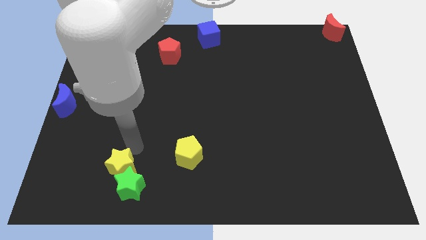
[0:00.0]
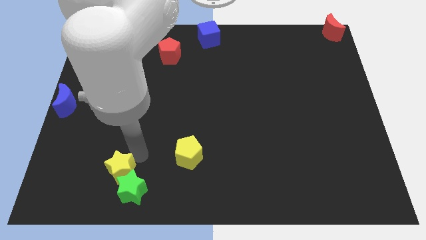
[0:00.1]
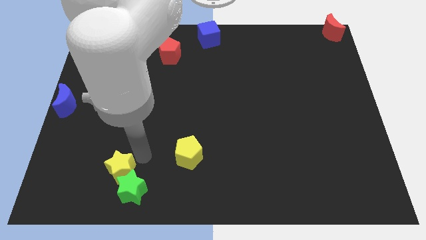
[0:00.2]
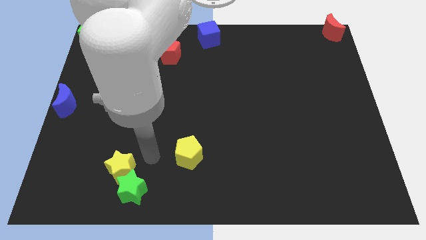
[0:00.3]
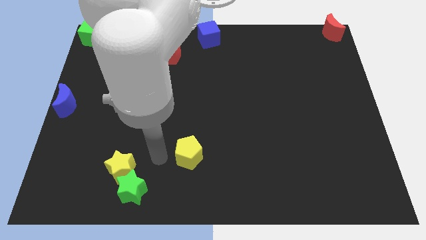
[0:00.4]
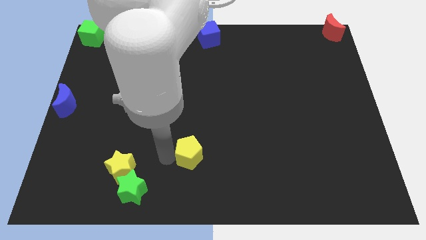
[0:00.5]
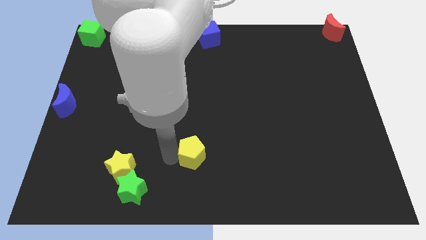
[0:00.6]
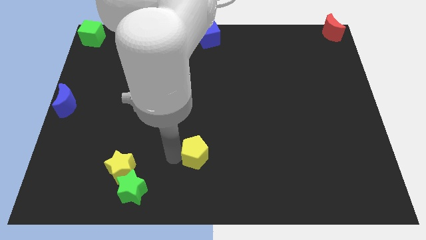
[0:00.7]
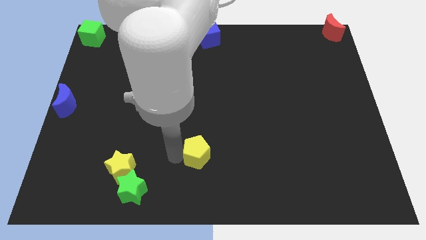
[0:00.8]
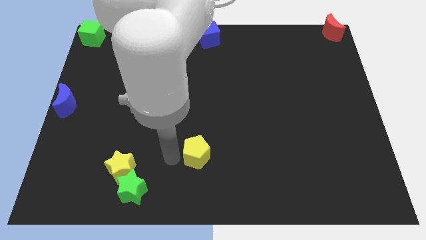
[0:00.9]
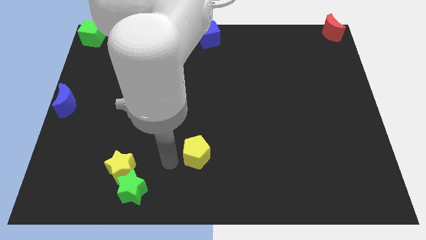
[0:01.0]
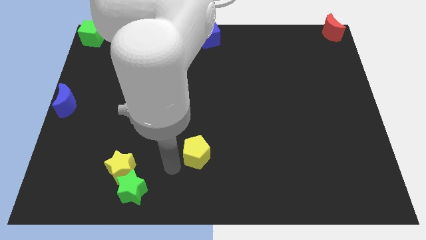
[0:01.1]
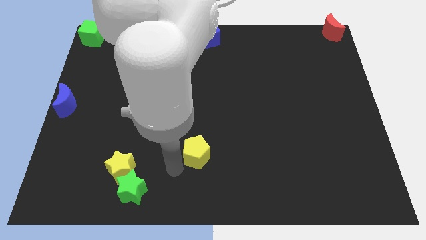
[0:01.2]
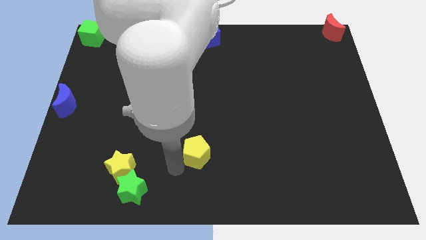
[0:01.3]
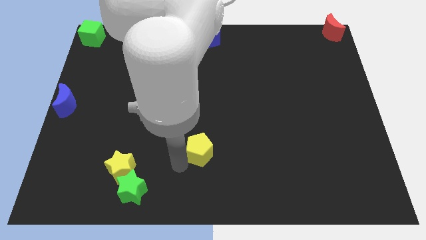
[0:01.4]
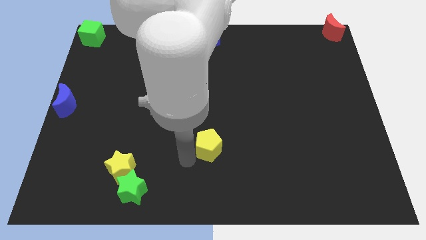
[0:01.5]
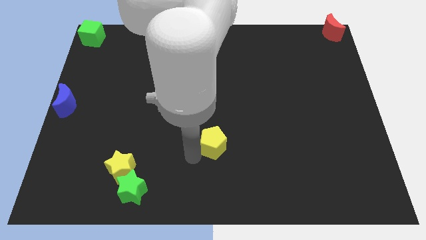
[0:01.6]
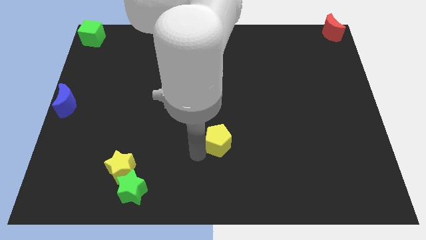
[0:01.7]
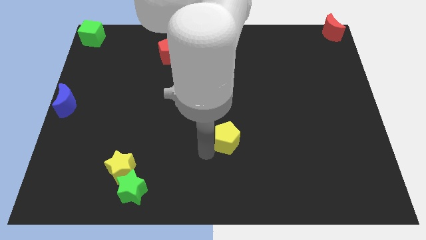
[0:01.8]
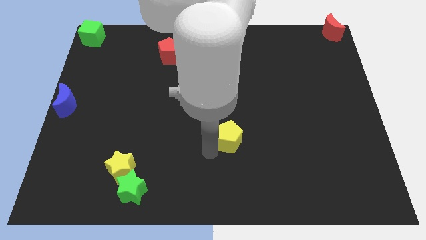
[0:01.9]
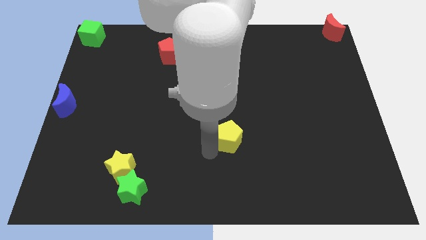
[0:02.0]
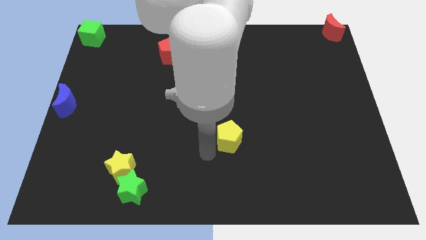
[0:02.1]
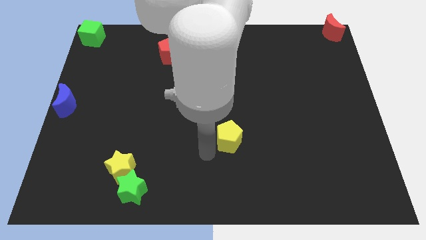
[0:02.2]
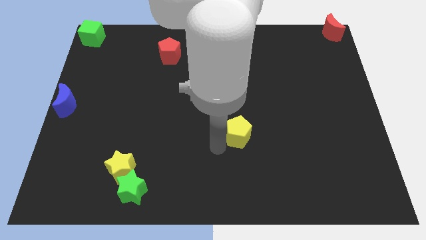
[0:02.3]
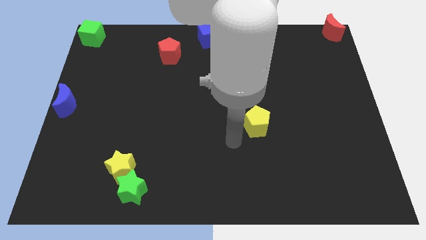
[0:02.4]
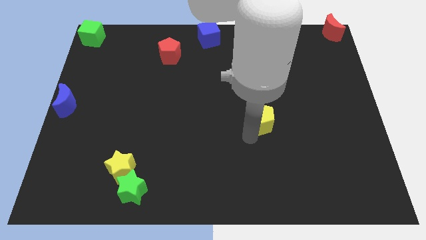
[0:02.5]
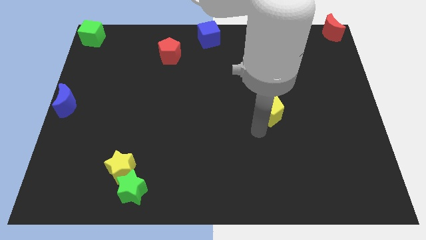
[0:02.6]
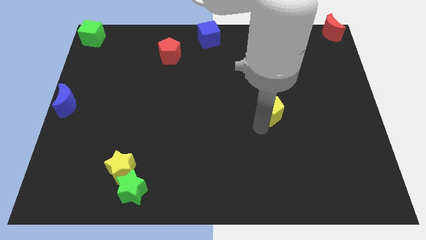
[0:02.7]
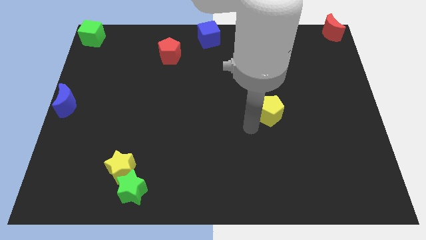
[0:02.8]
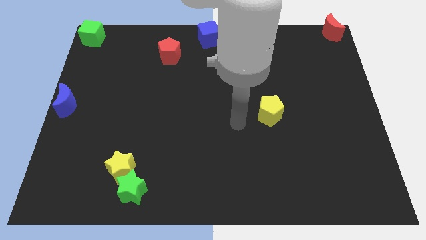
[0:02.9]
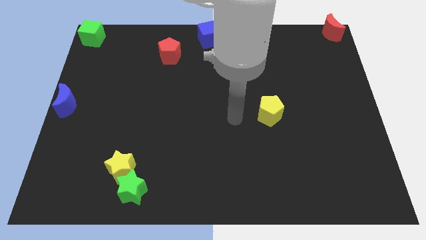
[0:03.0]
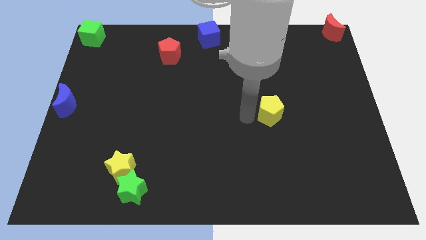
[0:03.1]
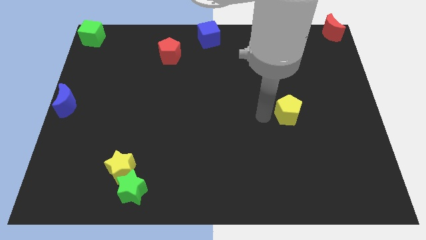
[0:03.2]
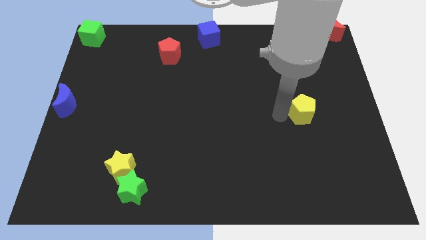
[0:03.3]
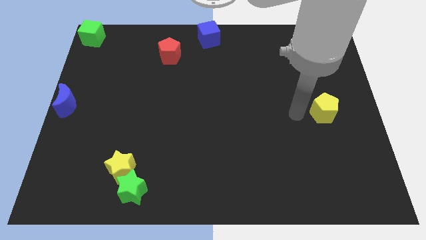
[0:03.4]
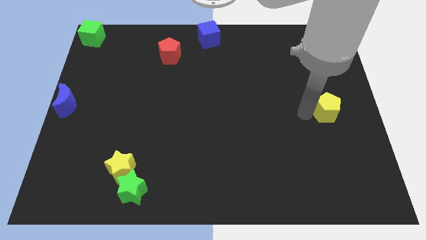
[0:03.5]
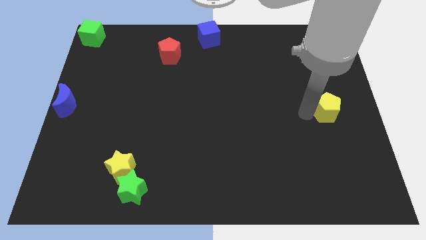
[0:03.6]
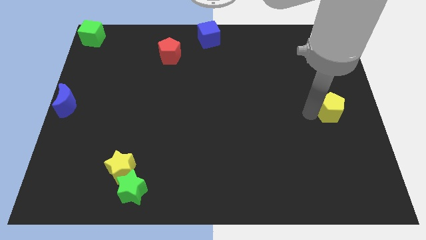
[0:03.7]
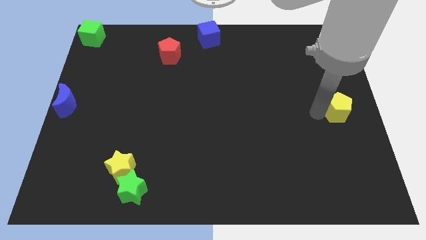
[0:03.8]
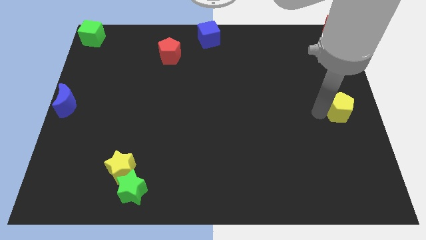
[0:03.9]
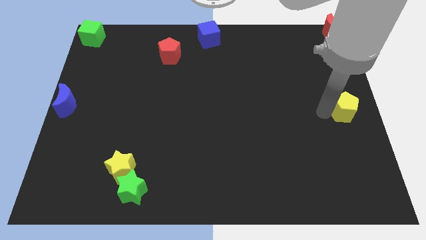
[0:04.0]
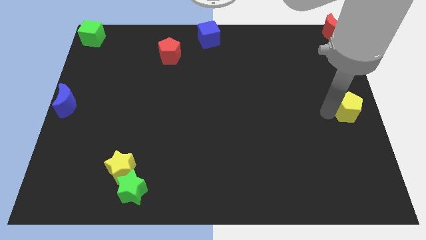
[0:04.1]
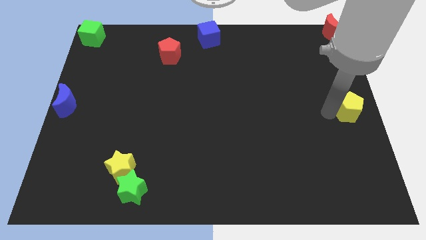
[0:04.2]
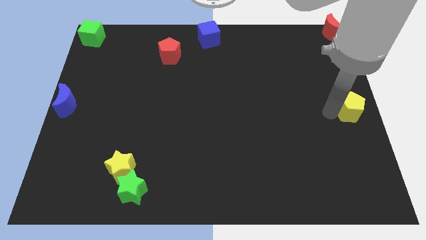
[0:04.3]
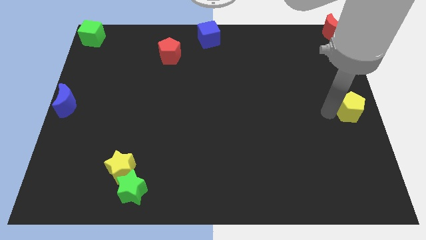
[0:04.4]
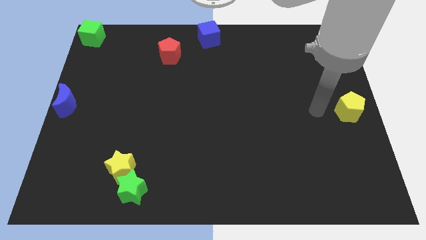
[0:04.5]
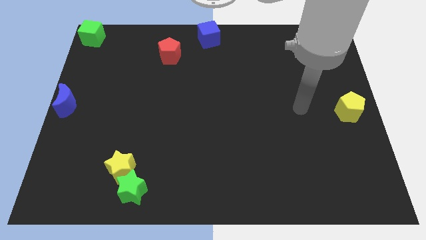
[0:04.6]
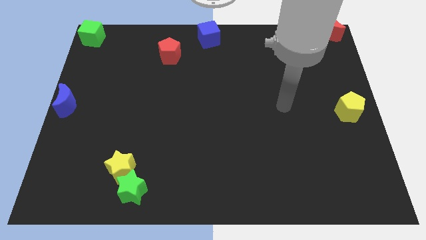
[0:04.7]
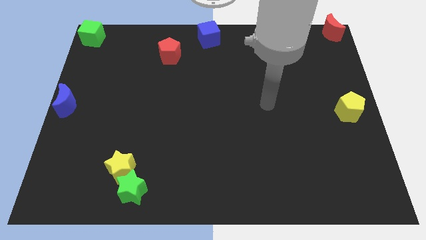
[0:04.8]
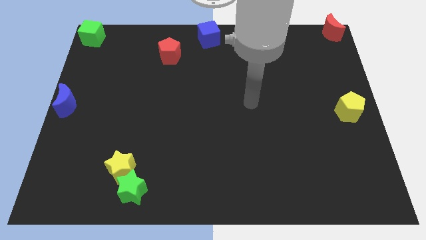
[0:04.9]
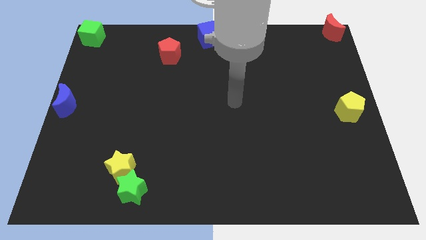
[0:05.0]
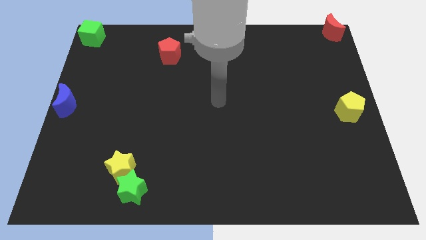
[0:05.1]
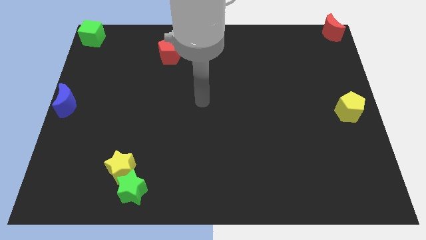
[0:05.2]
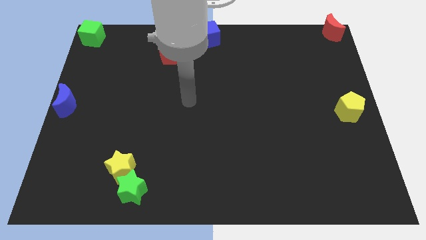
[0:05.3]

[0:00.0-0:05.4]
move yellow pentagon towards the right middle of the board

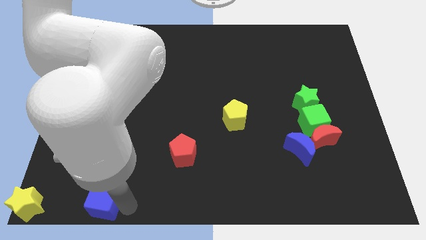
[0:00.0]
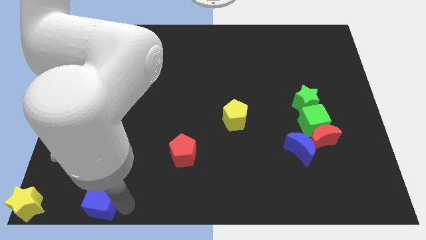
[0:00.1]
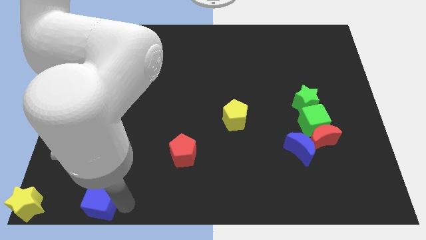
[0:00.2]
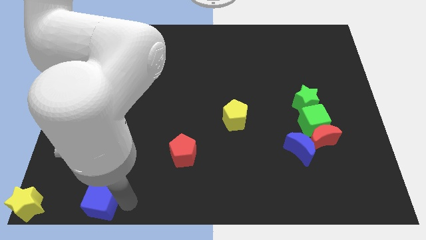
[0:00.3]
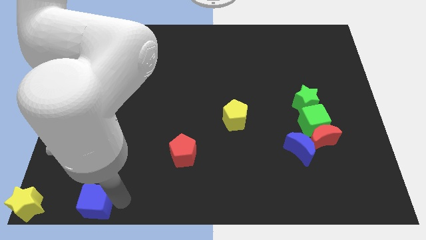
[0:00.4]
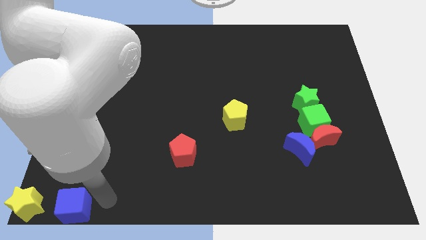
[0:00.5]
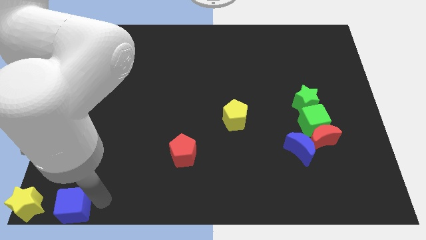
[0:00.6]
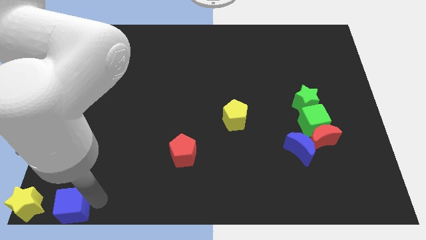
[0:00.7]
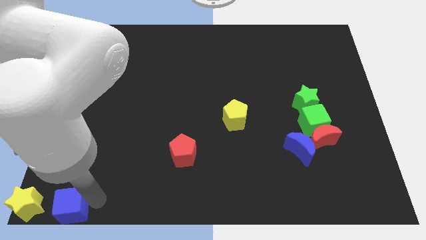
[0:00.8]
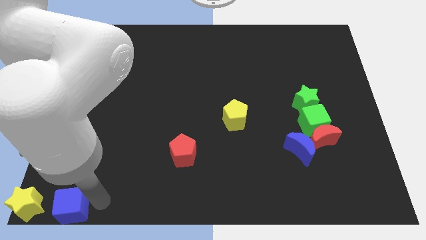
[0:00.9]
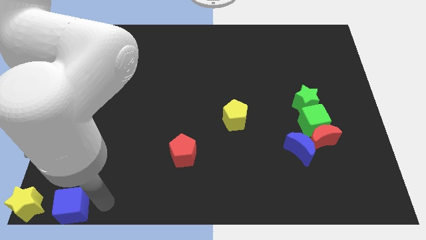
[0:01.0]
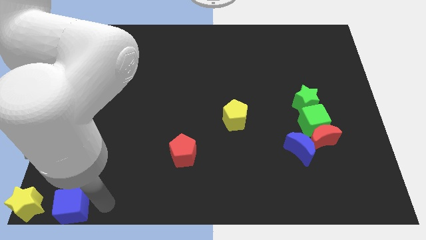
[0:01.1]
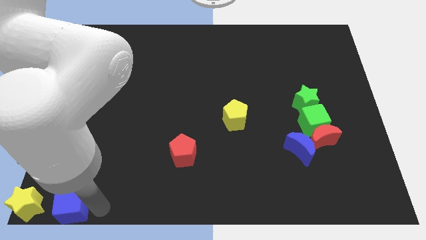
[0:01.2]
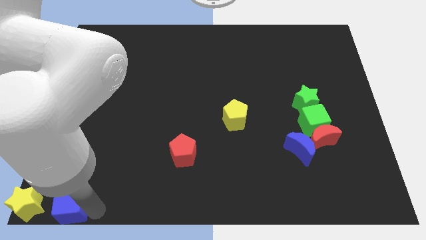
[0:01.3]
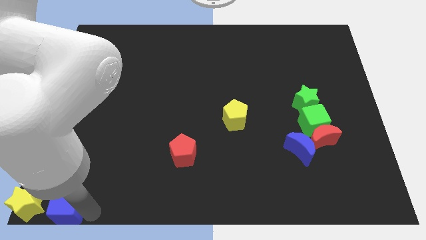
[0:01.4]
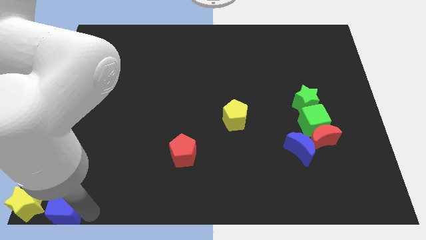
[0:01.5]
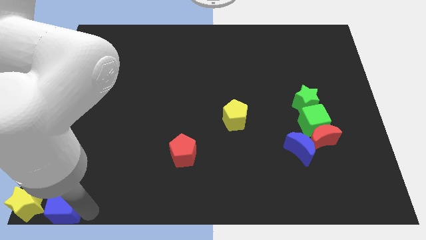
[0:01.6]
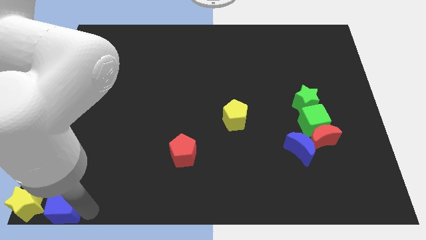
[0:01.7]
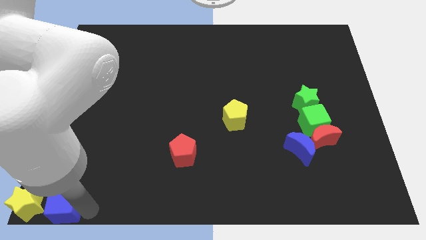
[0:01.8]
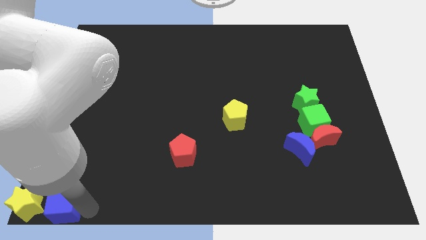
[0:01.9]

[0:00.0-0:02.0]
move blue cube to the right of the yellow star

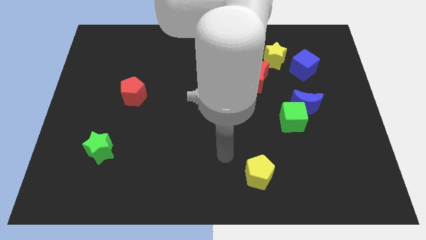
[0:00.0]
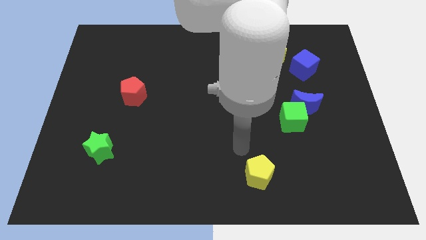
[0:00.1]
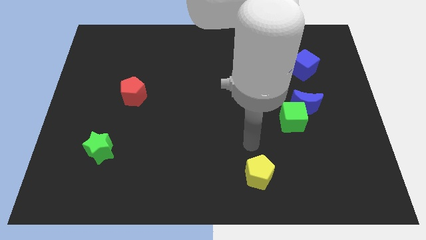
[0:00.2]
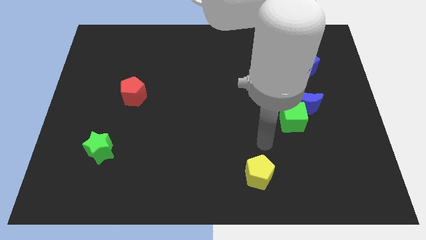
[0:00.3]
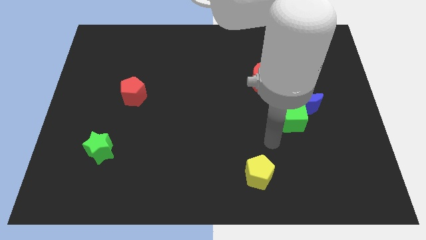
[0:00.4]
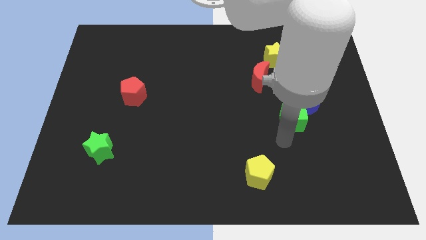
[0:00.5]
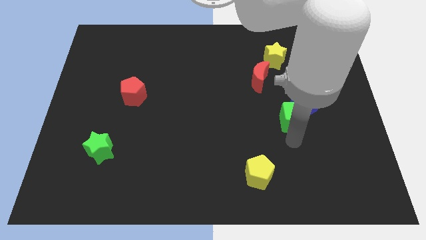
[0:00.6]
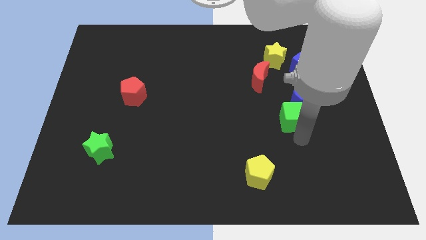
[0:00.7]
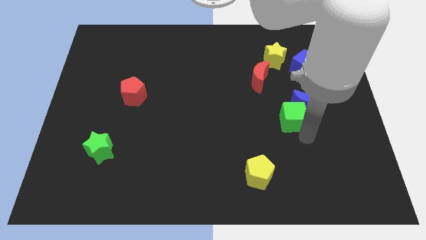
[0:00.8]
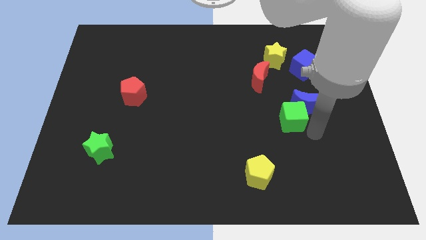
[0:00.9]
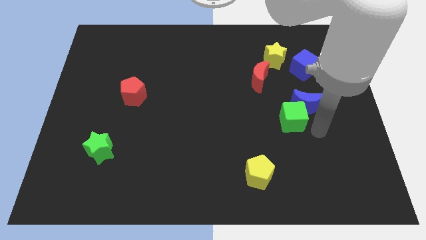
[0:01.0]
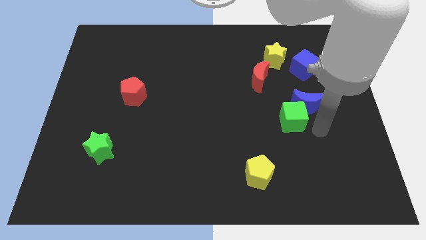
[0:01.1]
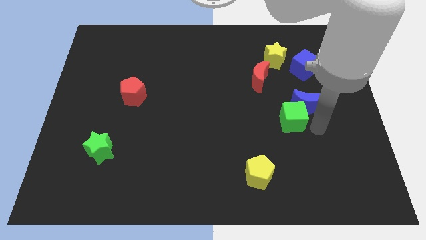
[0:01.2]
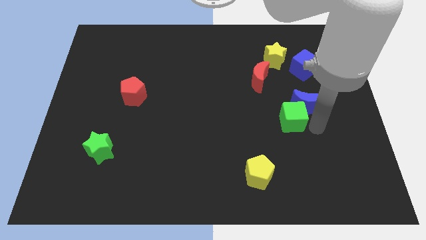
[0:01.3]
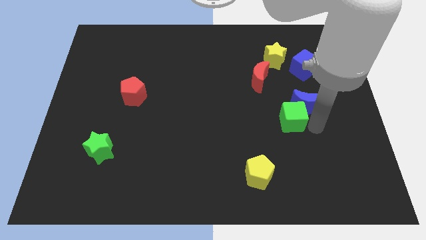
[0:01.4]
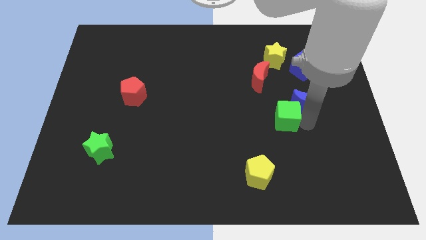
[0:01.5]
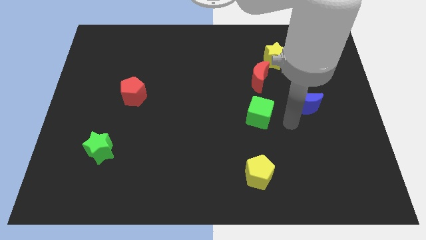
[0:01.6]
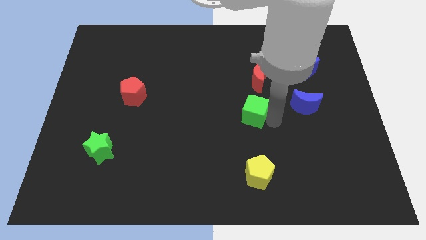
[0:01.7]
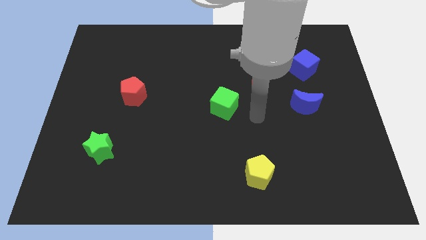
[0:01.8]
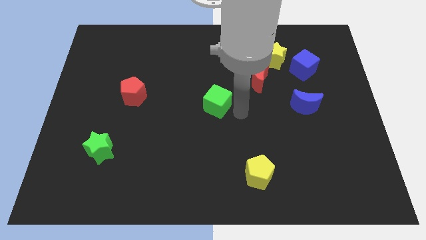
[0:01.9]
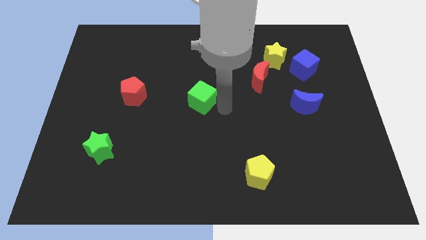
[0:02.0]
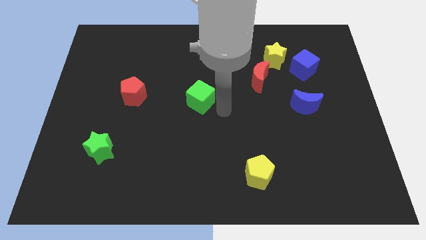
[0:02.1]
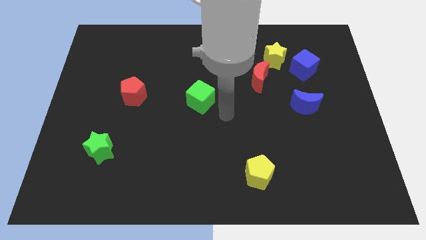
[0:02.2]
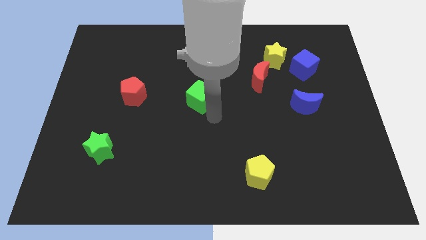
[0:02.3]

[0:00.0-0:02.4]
slightly push green cube
